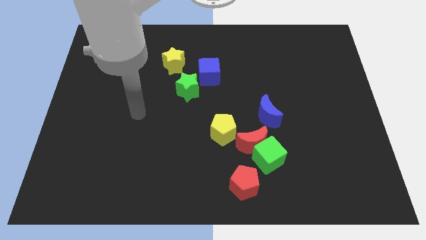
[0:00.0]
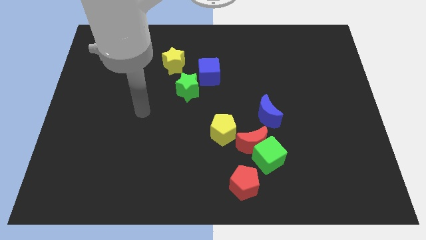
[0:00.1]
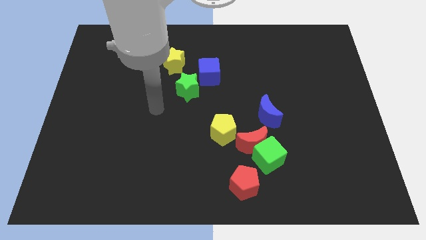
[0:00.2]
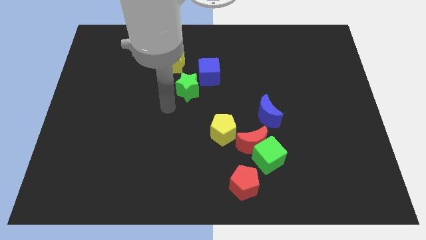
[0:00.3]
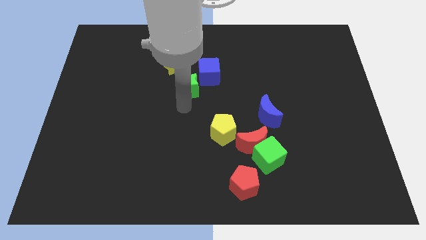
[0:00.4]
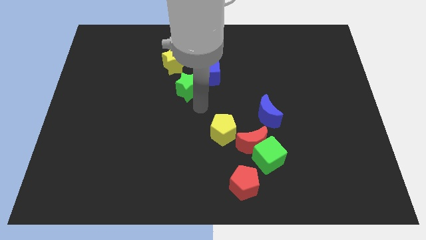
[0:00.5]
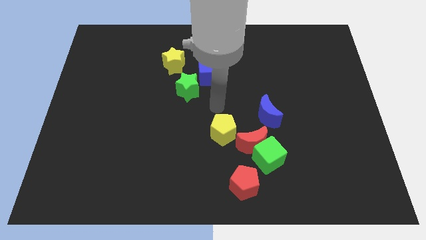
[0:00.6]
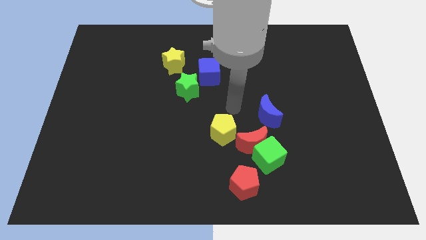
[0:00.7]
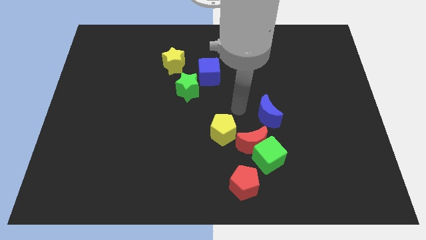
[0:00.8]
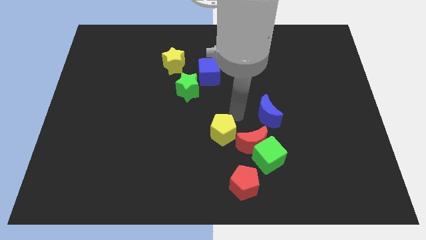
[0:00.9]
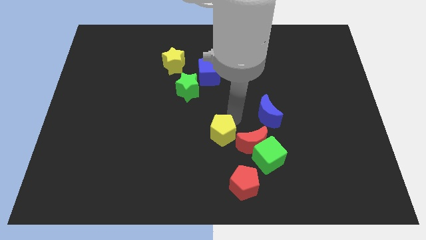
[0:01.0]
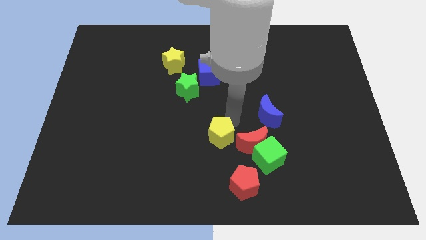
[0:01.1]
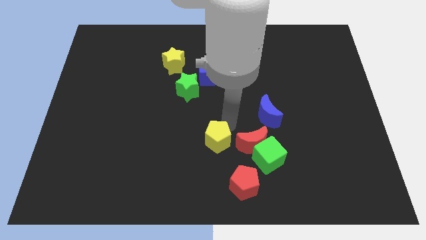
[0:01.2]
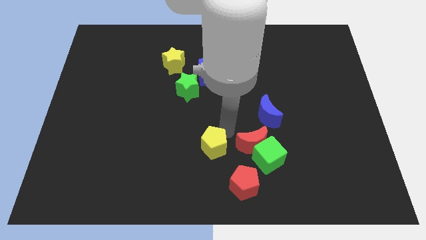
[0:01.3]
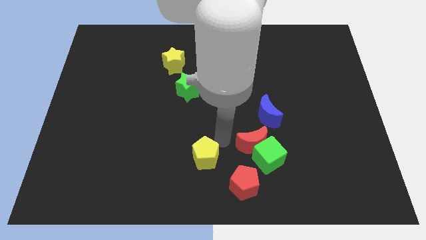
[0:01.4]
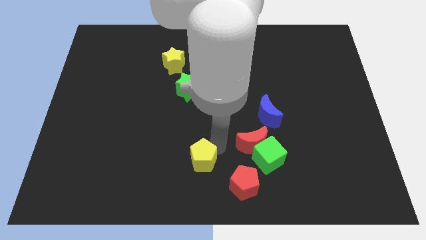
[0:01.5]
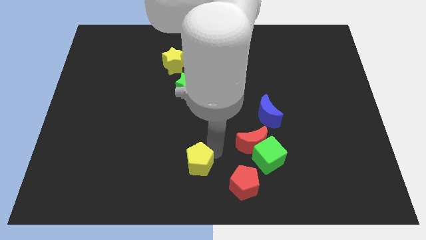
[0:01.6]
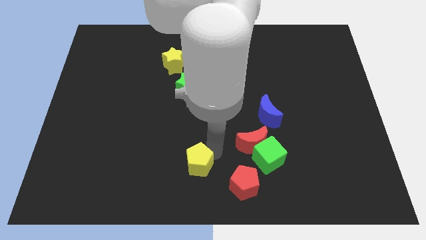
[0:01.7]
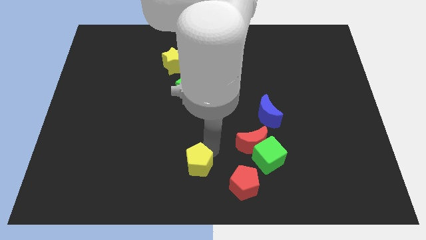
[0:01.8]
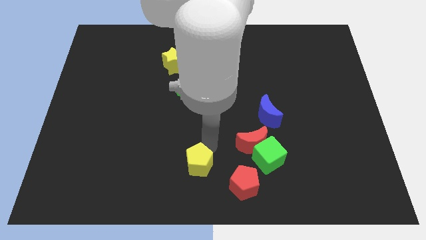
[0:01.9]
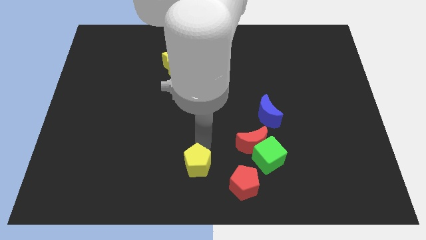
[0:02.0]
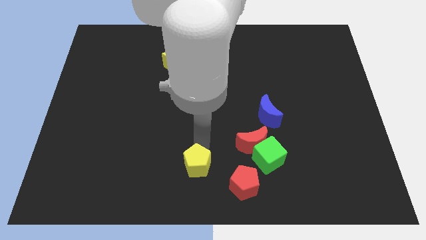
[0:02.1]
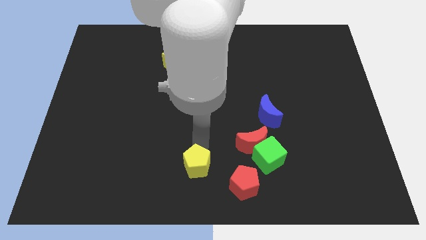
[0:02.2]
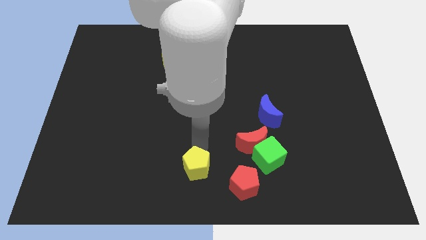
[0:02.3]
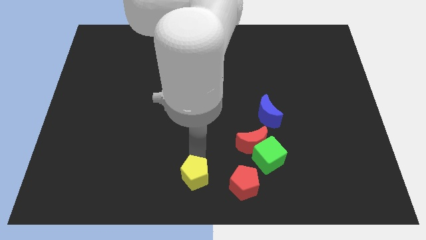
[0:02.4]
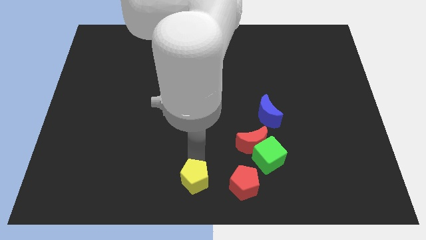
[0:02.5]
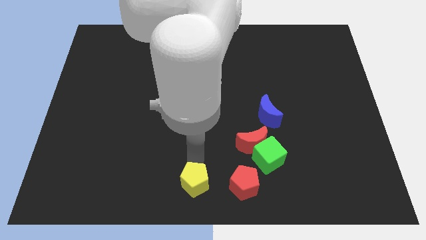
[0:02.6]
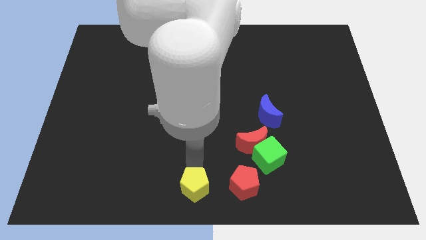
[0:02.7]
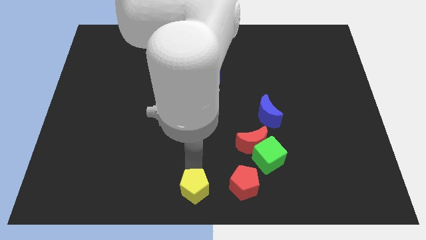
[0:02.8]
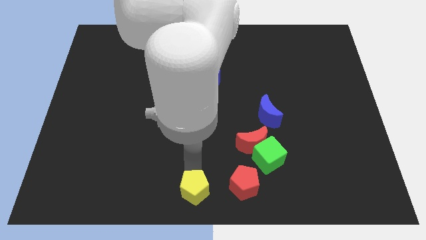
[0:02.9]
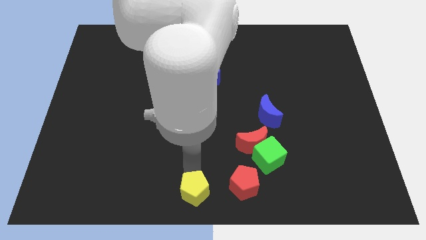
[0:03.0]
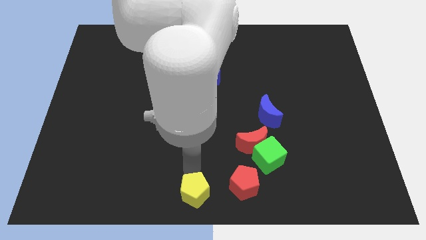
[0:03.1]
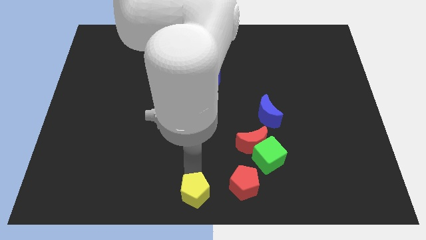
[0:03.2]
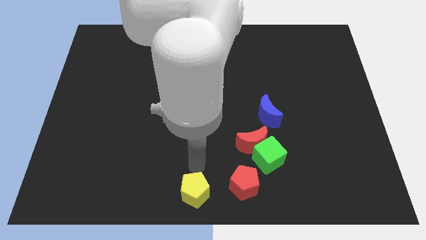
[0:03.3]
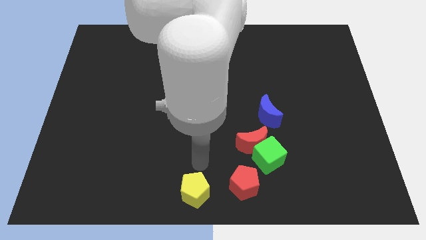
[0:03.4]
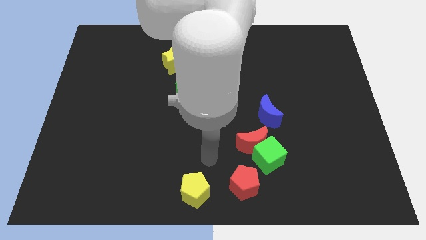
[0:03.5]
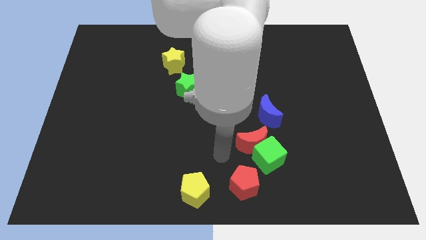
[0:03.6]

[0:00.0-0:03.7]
push the yellow pentagon to the left of the red pentagon

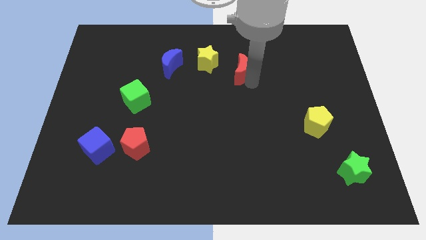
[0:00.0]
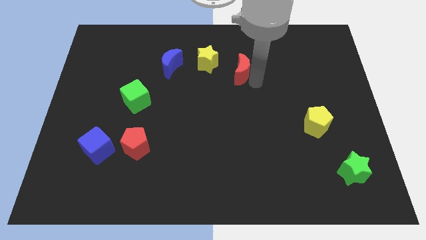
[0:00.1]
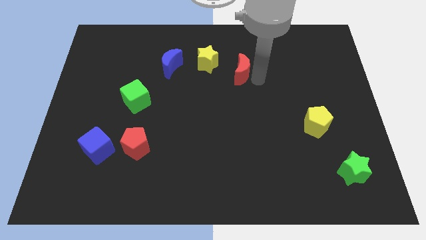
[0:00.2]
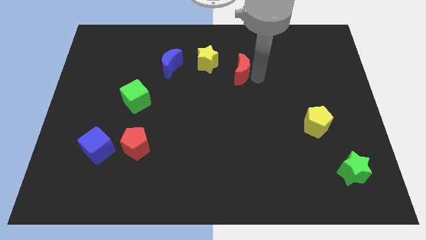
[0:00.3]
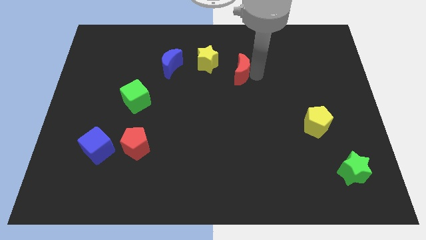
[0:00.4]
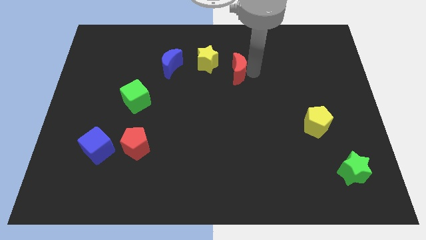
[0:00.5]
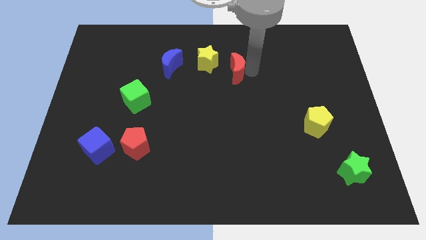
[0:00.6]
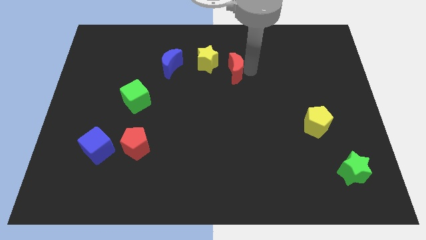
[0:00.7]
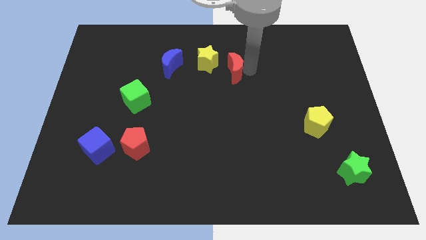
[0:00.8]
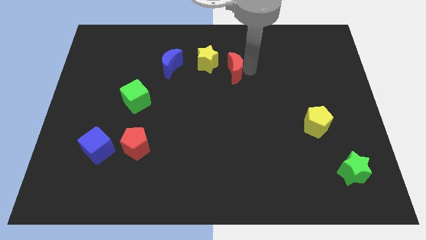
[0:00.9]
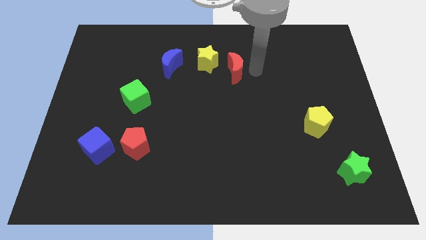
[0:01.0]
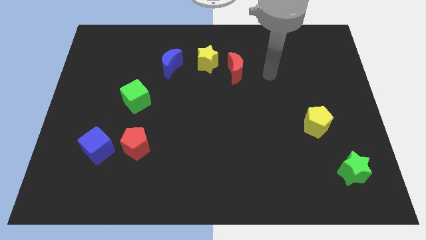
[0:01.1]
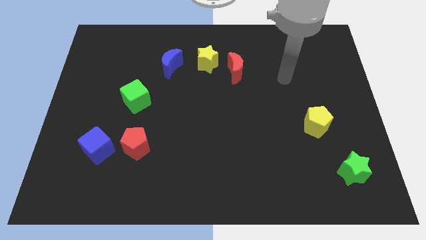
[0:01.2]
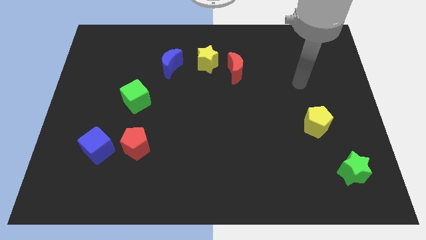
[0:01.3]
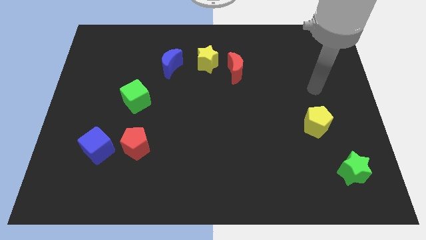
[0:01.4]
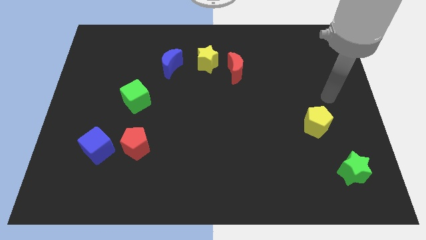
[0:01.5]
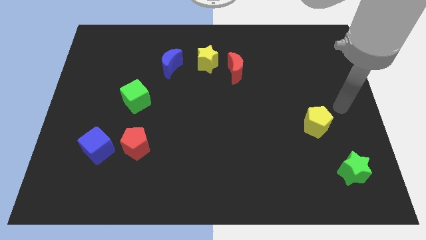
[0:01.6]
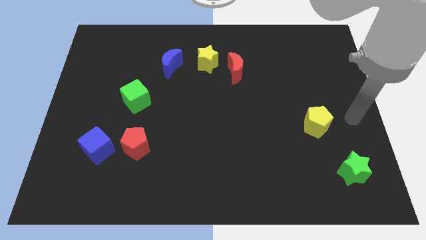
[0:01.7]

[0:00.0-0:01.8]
slide the red moon slightly to the left

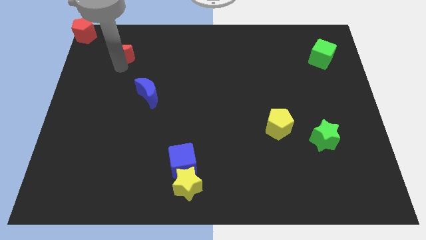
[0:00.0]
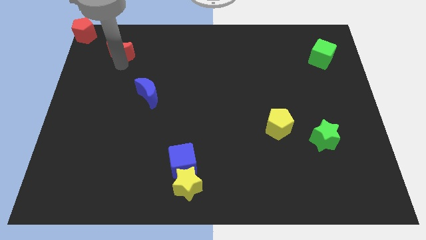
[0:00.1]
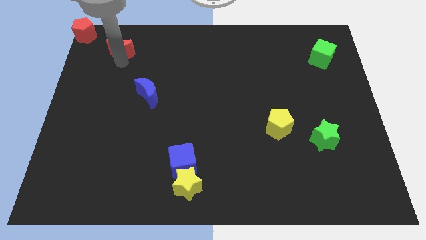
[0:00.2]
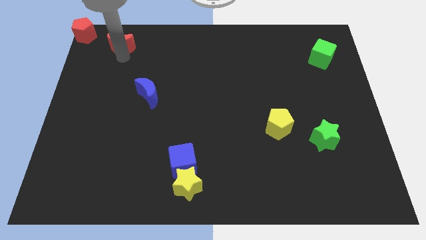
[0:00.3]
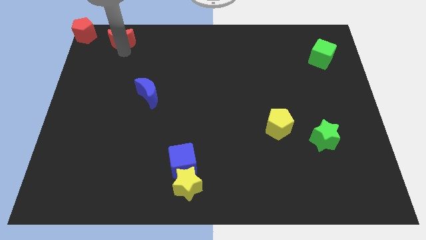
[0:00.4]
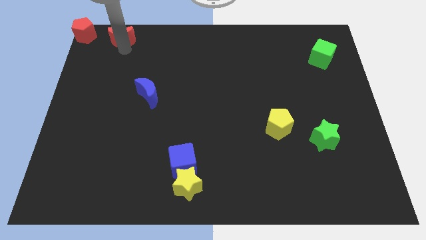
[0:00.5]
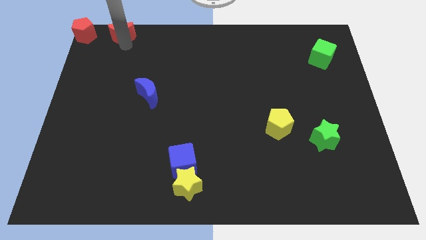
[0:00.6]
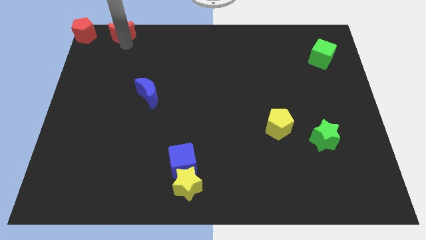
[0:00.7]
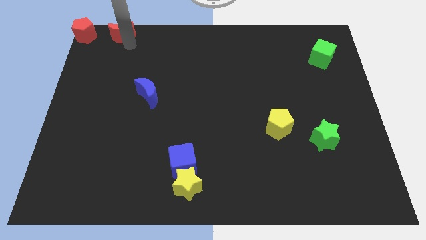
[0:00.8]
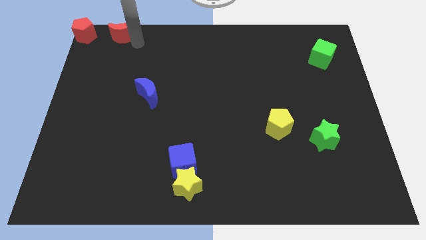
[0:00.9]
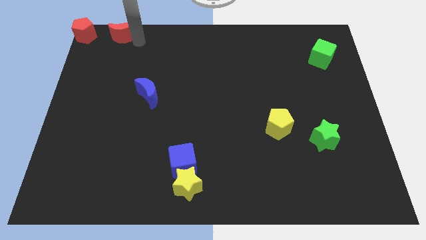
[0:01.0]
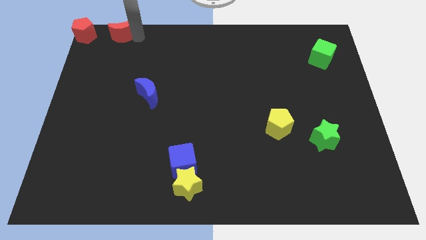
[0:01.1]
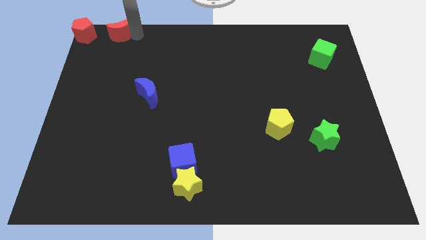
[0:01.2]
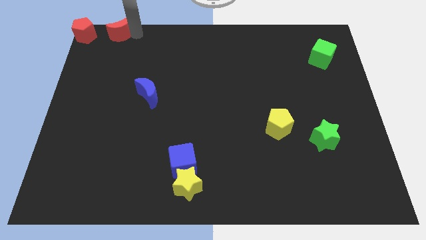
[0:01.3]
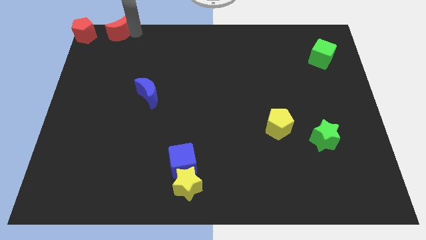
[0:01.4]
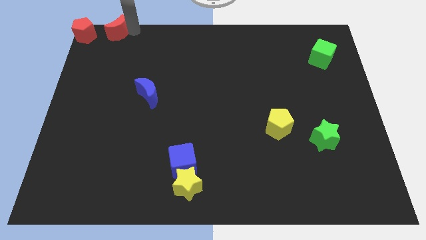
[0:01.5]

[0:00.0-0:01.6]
push the red crescent right to the red pentagon

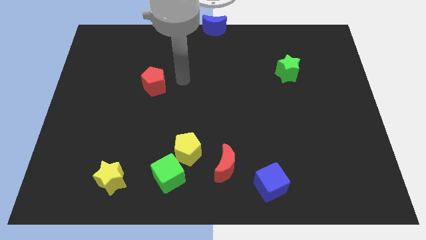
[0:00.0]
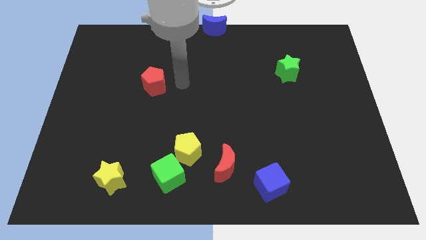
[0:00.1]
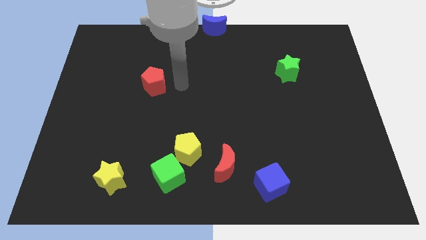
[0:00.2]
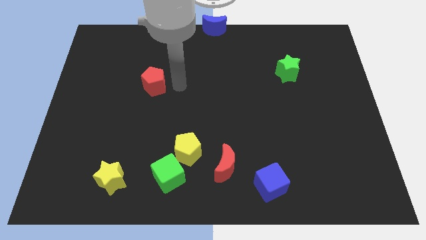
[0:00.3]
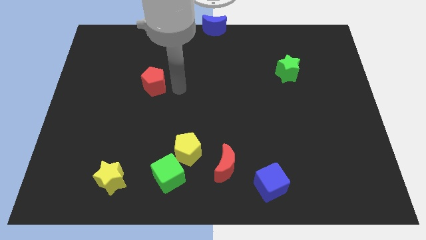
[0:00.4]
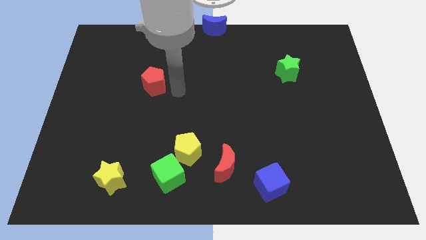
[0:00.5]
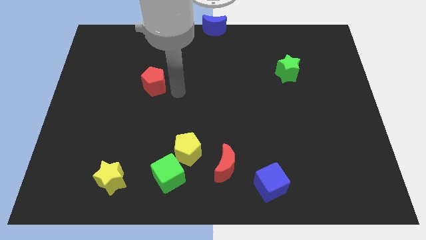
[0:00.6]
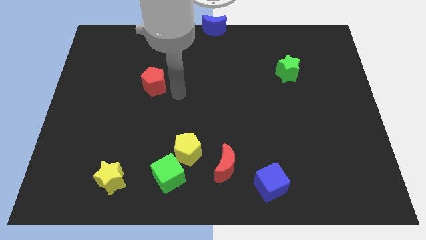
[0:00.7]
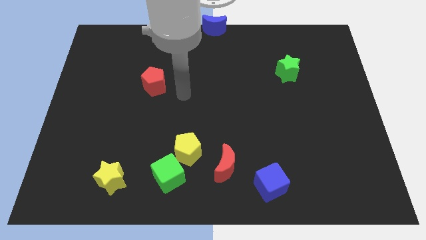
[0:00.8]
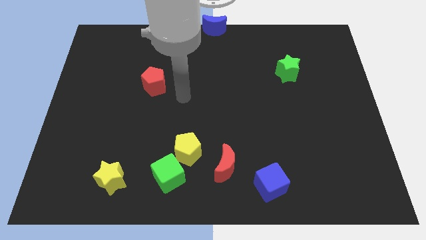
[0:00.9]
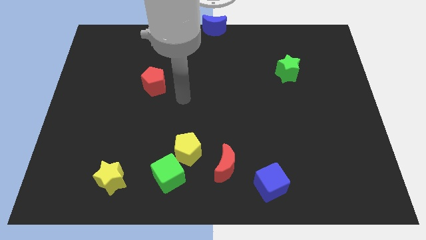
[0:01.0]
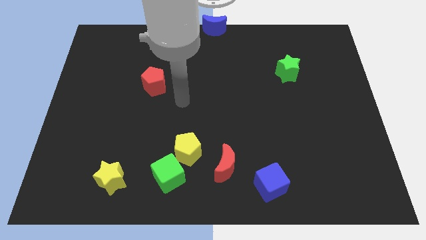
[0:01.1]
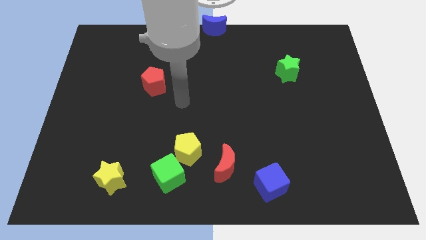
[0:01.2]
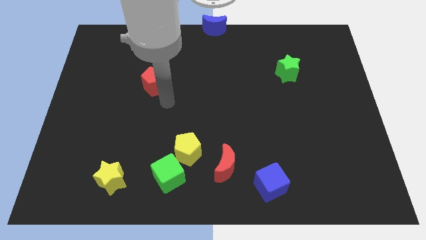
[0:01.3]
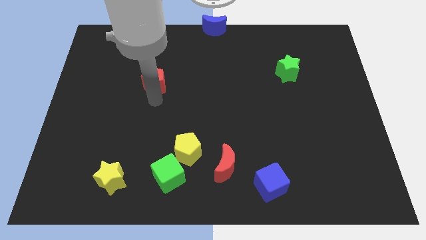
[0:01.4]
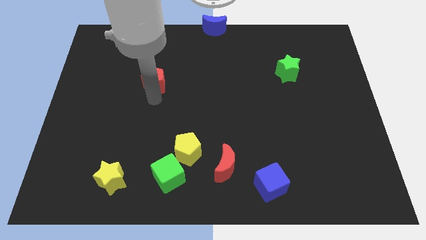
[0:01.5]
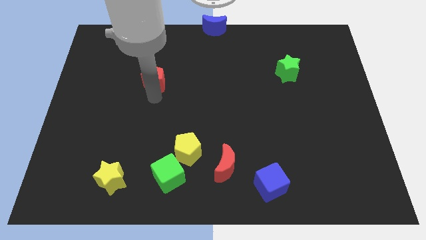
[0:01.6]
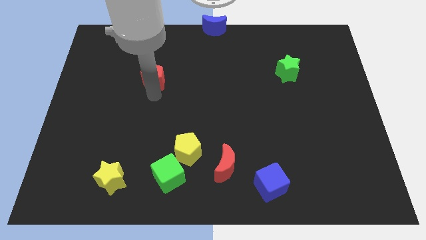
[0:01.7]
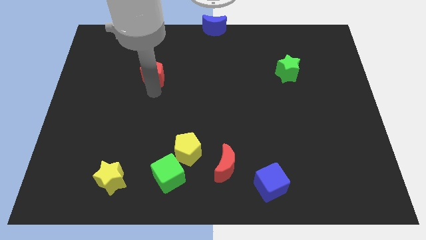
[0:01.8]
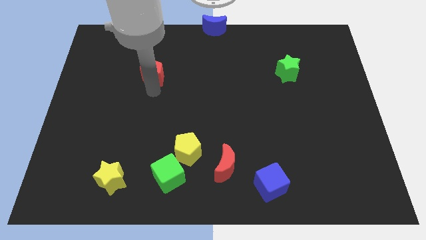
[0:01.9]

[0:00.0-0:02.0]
move the red pentagon slightly up
